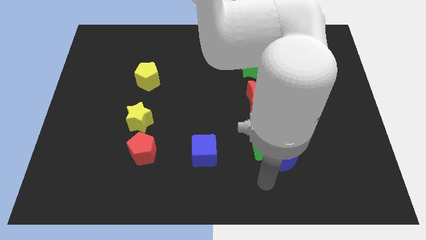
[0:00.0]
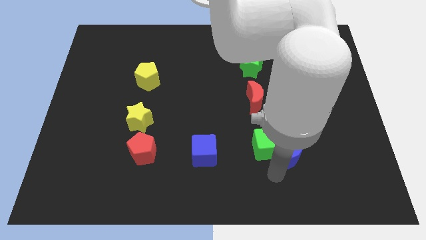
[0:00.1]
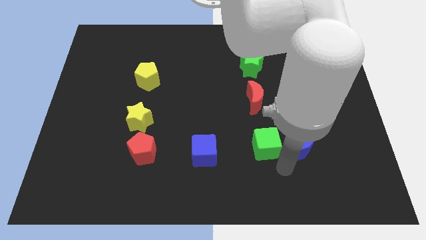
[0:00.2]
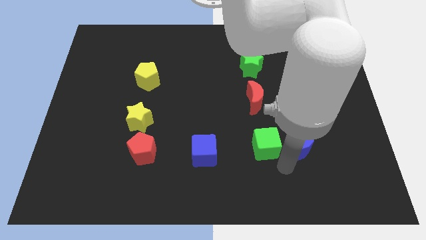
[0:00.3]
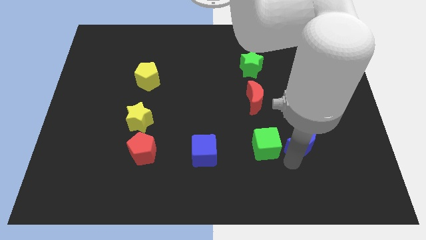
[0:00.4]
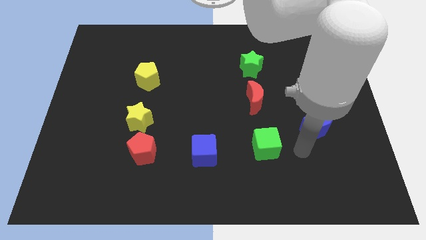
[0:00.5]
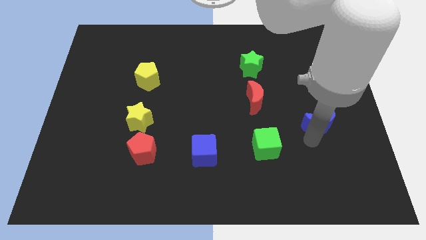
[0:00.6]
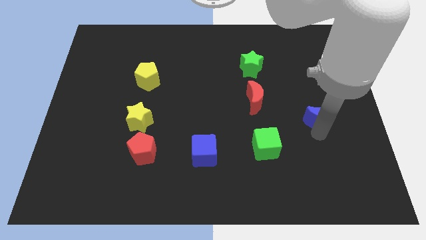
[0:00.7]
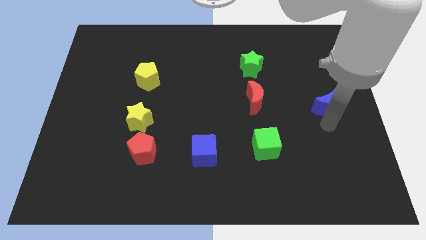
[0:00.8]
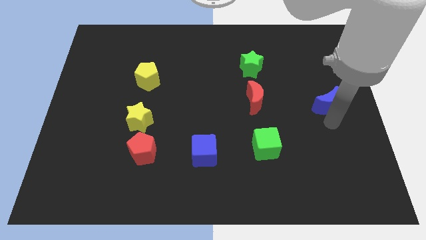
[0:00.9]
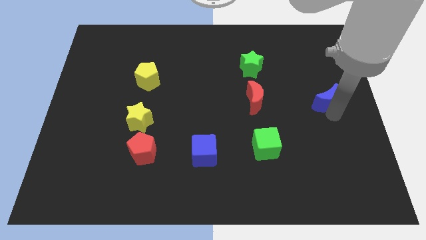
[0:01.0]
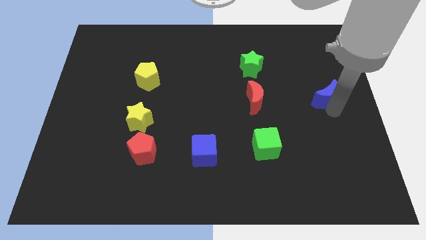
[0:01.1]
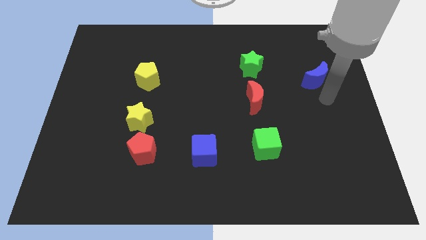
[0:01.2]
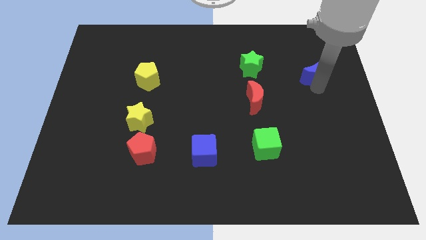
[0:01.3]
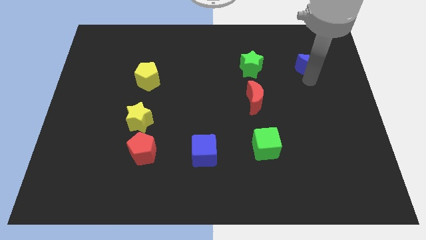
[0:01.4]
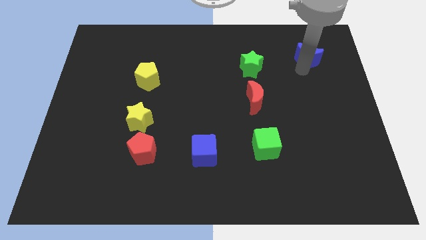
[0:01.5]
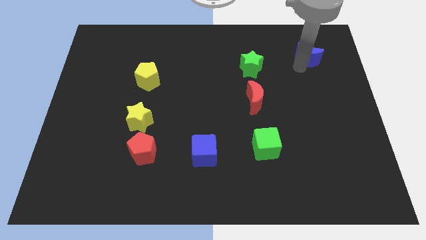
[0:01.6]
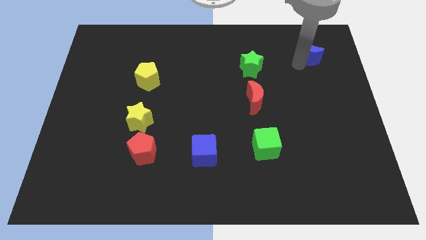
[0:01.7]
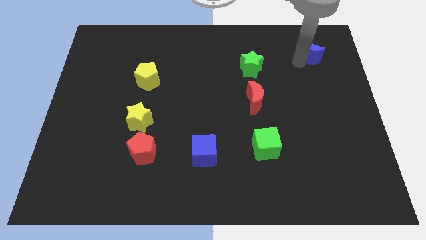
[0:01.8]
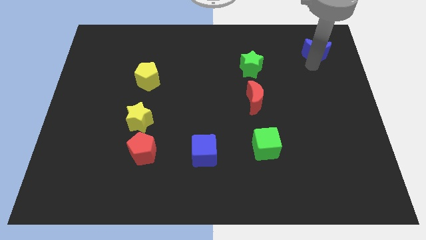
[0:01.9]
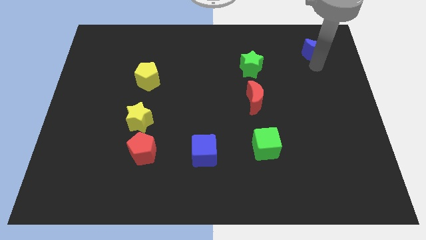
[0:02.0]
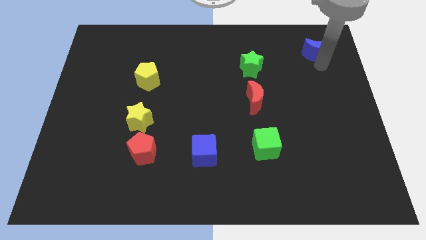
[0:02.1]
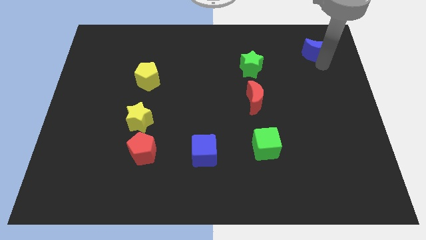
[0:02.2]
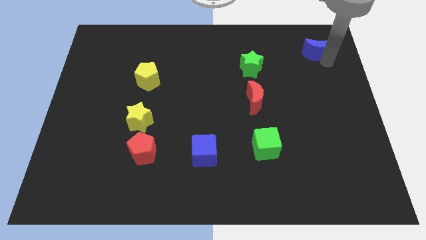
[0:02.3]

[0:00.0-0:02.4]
push the blue moon to the top right

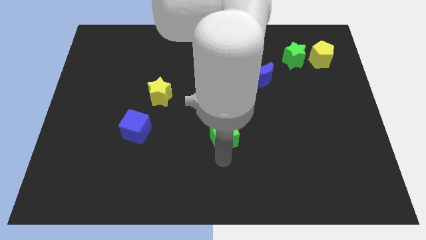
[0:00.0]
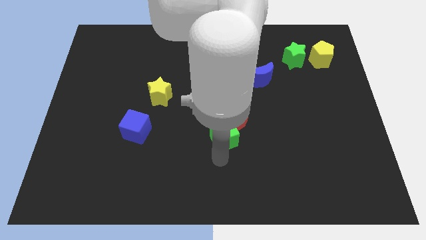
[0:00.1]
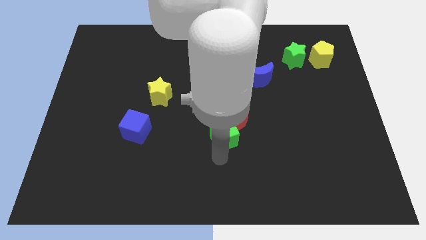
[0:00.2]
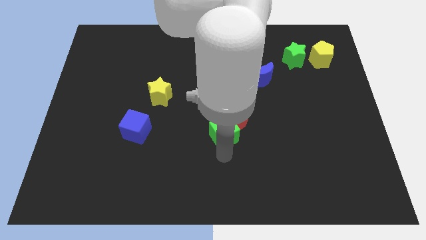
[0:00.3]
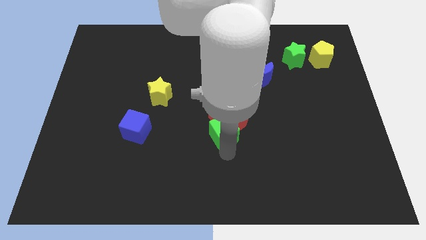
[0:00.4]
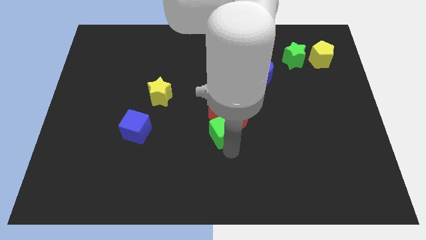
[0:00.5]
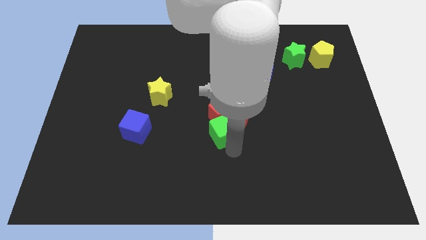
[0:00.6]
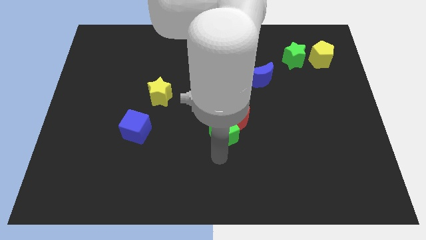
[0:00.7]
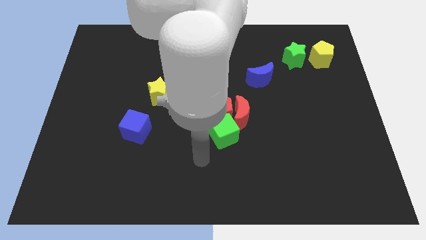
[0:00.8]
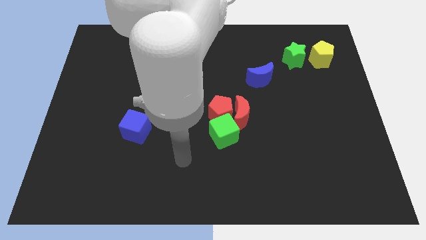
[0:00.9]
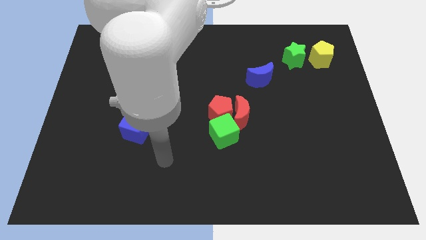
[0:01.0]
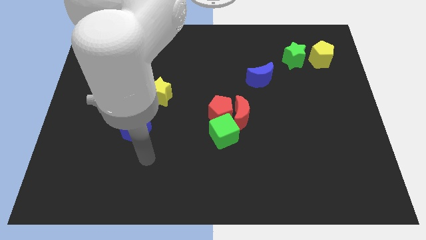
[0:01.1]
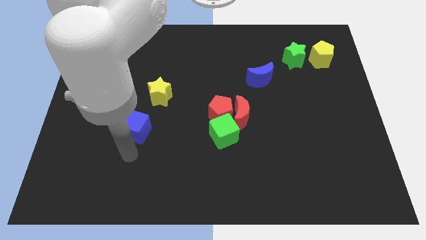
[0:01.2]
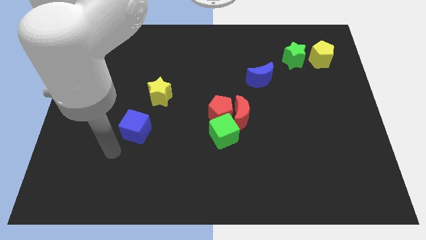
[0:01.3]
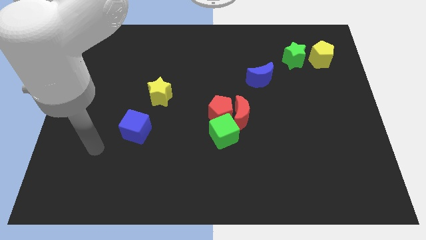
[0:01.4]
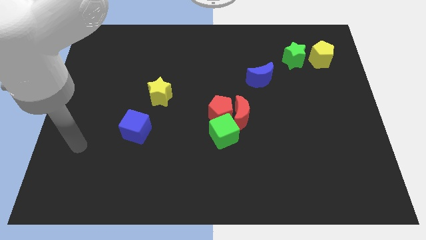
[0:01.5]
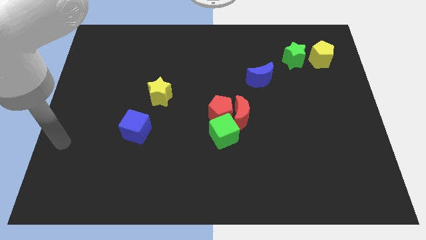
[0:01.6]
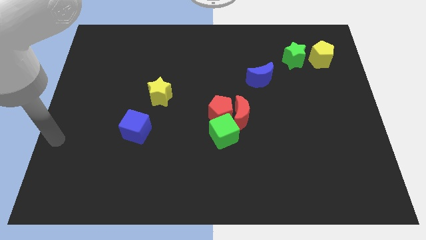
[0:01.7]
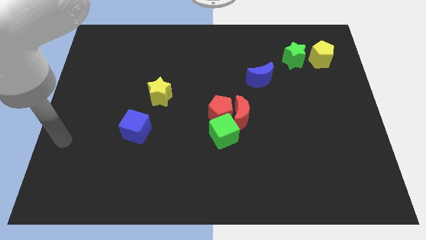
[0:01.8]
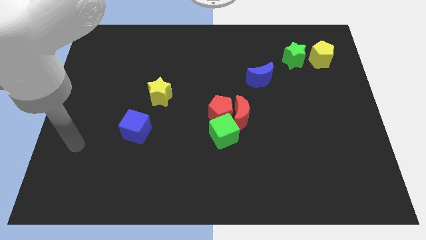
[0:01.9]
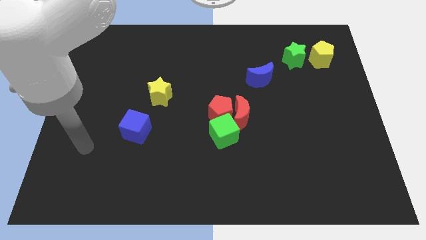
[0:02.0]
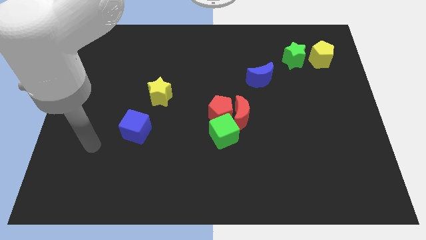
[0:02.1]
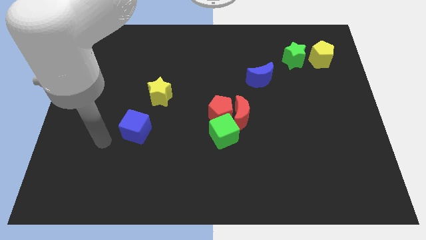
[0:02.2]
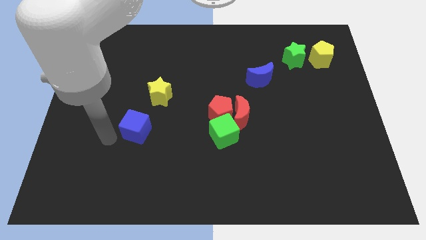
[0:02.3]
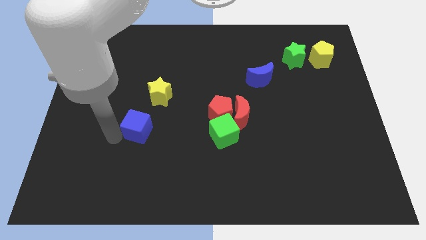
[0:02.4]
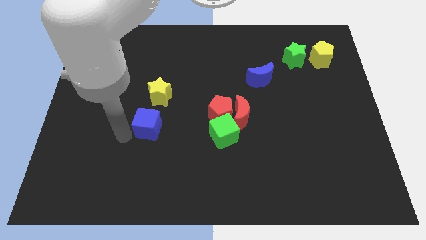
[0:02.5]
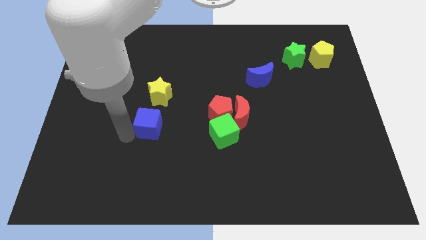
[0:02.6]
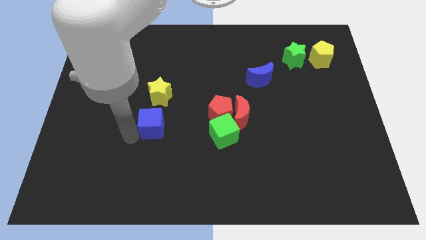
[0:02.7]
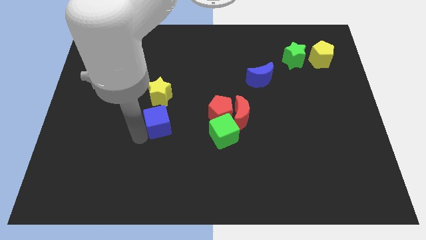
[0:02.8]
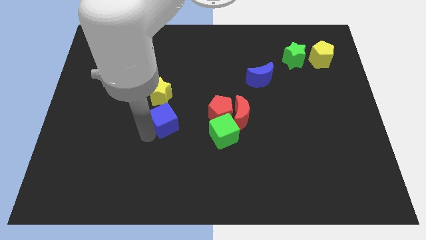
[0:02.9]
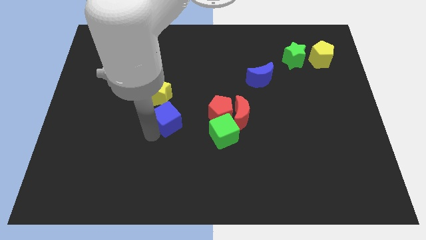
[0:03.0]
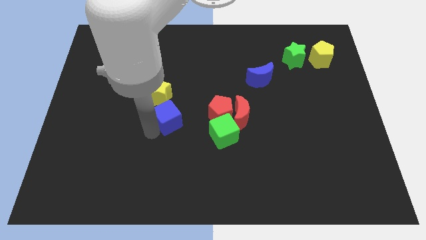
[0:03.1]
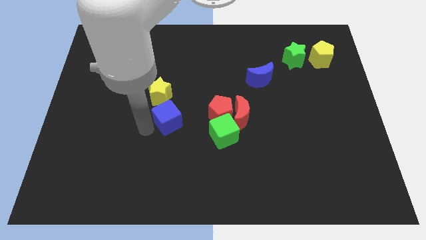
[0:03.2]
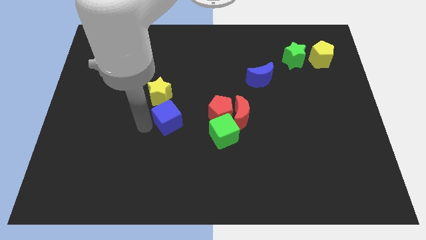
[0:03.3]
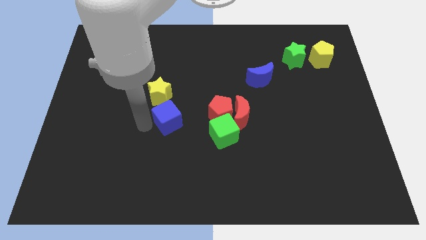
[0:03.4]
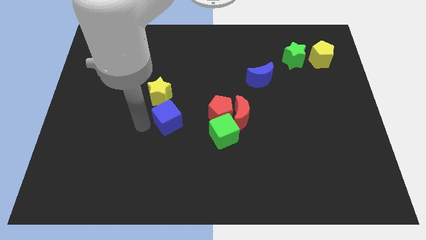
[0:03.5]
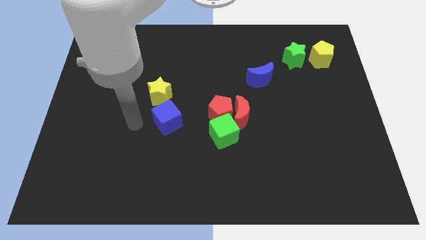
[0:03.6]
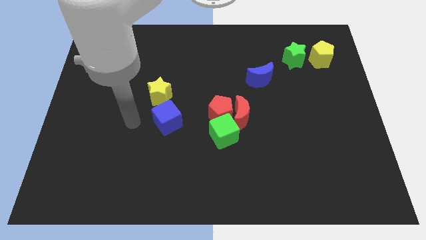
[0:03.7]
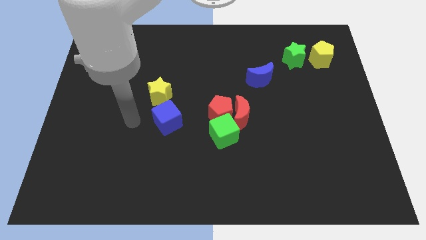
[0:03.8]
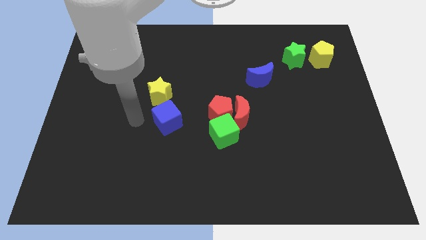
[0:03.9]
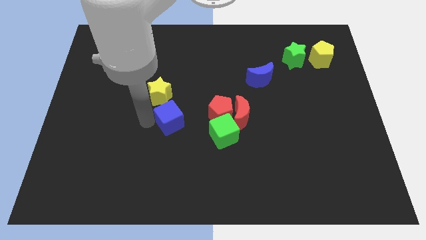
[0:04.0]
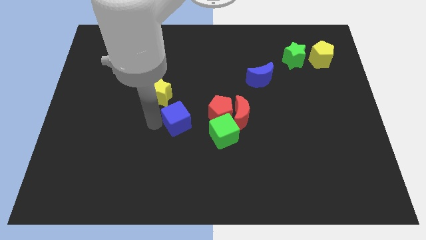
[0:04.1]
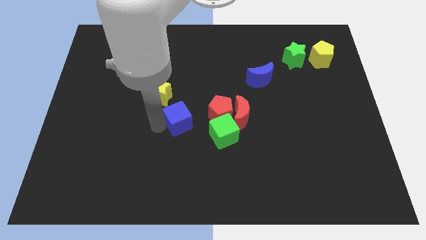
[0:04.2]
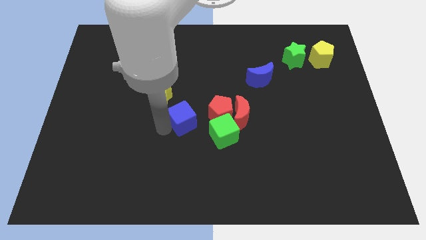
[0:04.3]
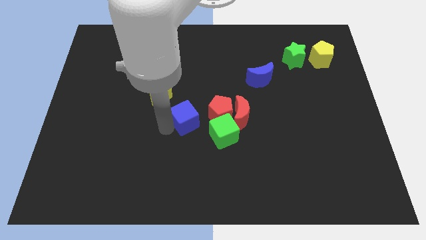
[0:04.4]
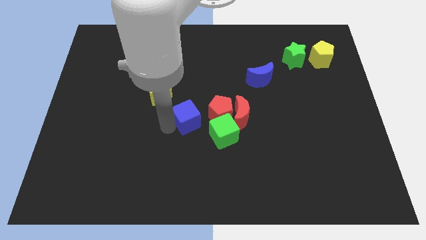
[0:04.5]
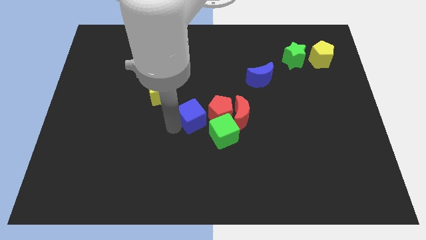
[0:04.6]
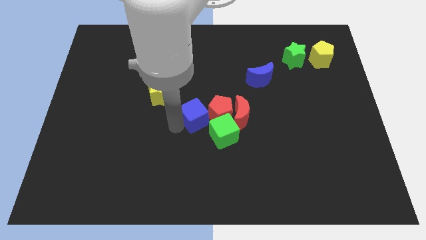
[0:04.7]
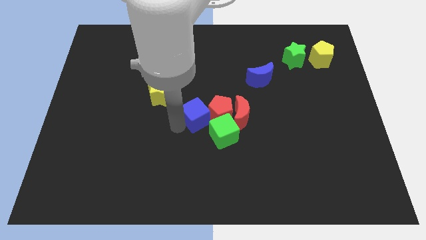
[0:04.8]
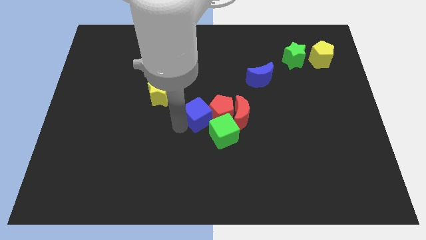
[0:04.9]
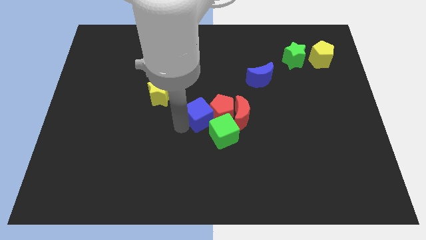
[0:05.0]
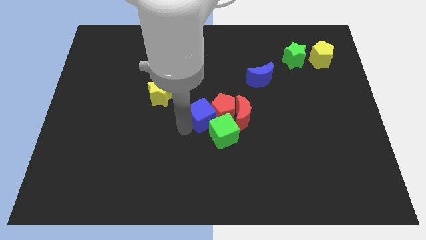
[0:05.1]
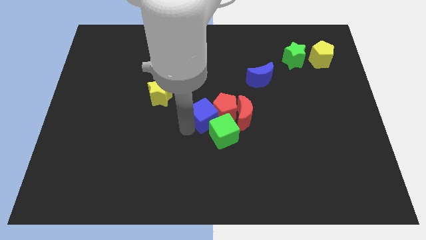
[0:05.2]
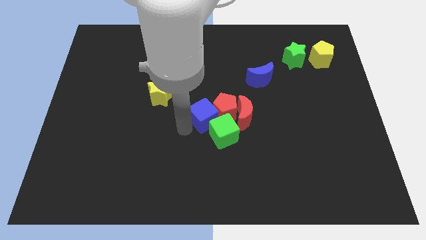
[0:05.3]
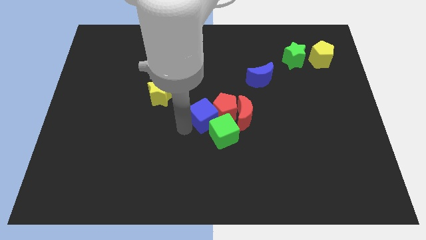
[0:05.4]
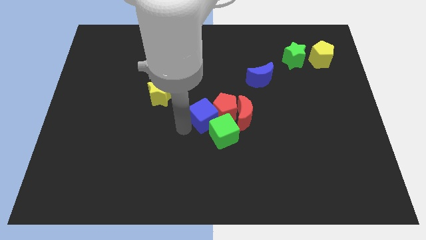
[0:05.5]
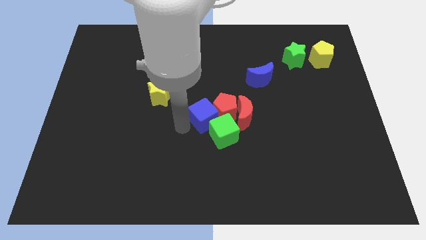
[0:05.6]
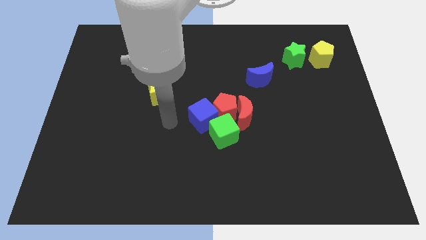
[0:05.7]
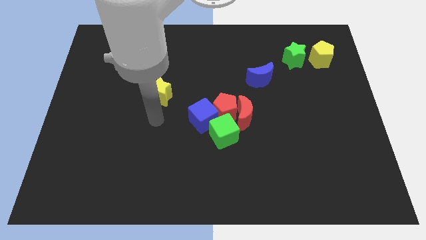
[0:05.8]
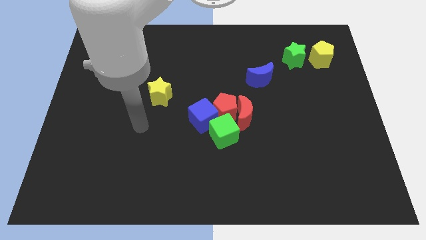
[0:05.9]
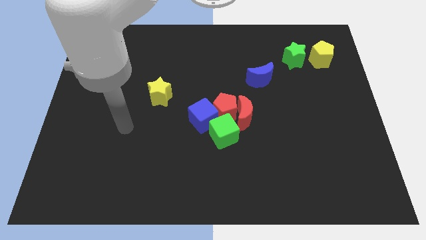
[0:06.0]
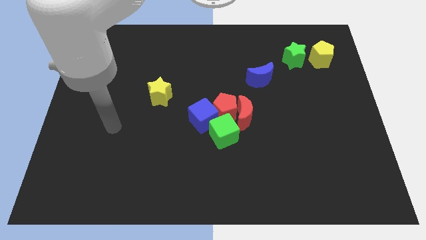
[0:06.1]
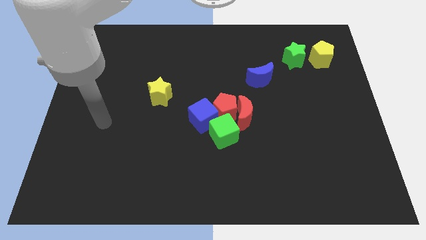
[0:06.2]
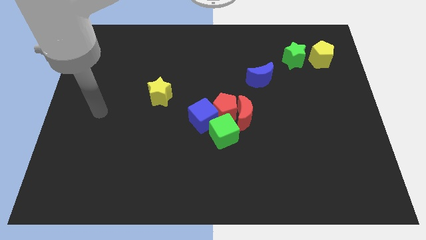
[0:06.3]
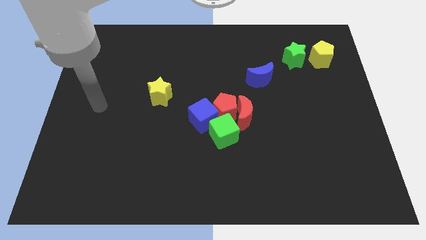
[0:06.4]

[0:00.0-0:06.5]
push the blue cube into the red pentagon
